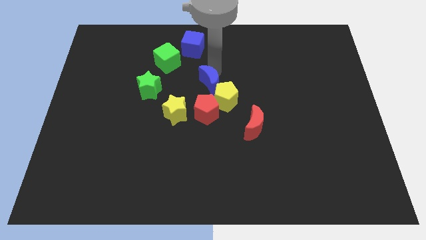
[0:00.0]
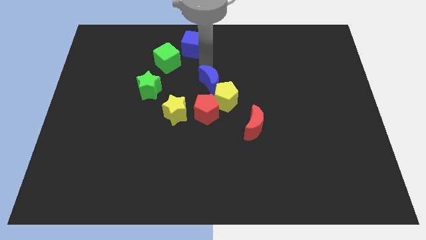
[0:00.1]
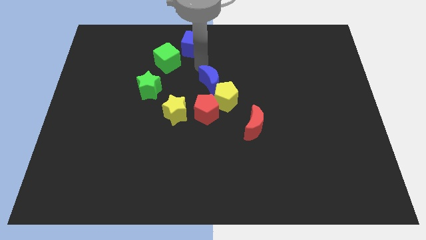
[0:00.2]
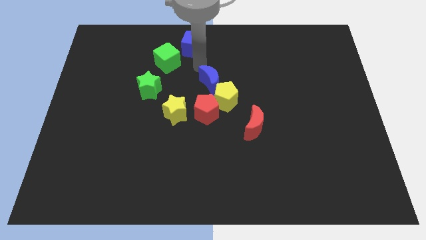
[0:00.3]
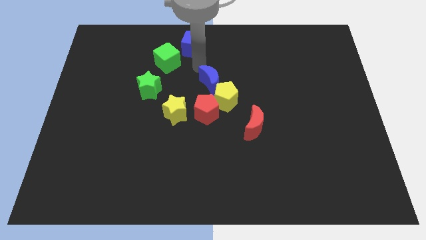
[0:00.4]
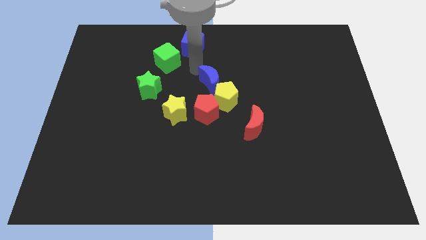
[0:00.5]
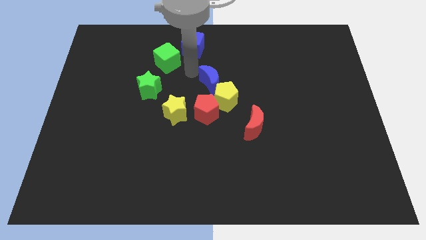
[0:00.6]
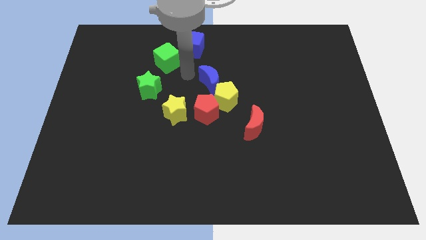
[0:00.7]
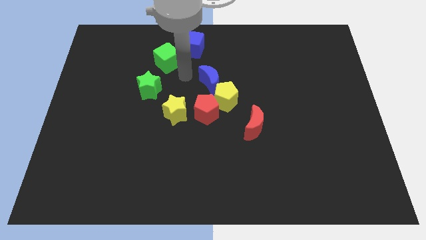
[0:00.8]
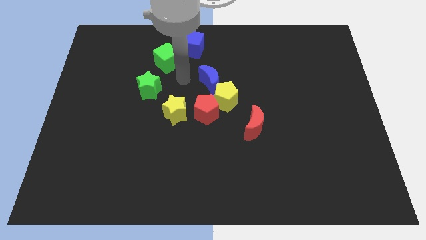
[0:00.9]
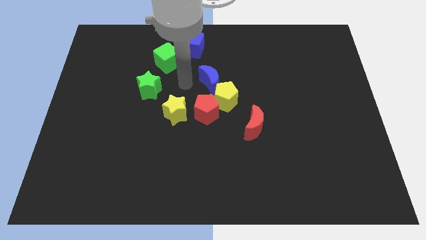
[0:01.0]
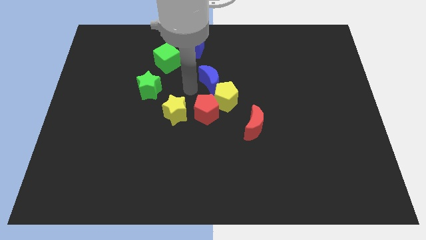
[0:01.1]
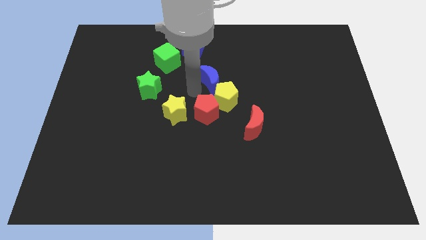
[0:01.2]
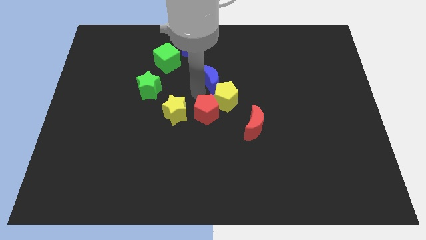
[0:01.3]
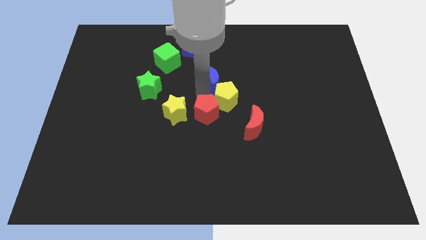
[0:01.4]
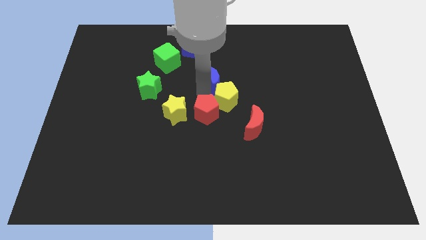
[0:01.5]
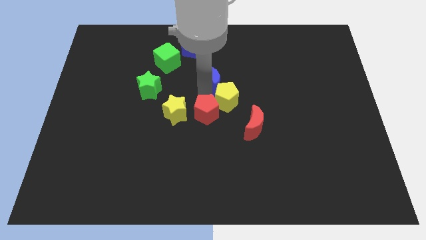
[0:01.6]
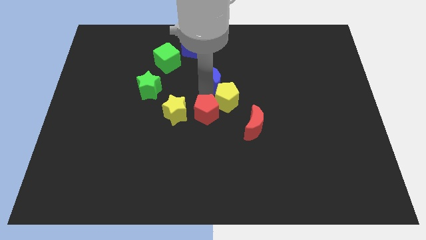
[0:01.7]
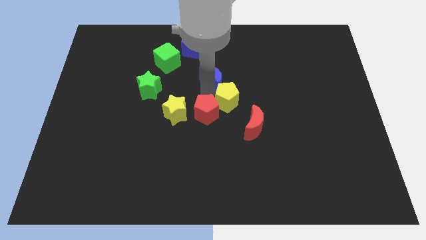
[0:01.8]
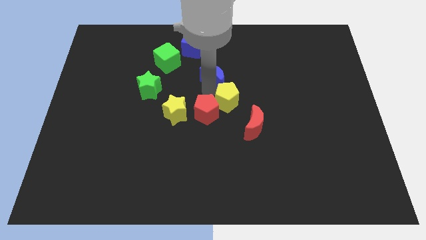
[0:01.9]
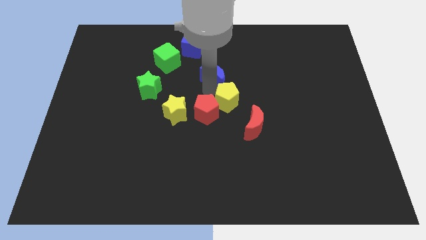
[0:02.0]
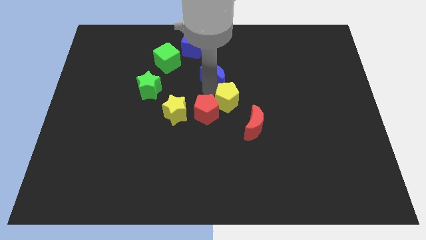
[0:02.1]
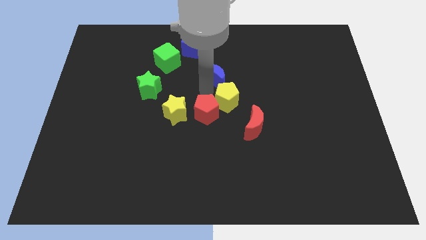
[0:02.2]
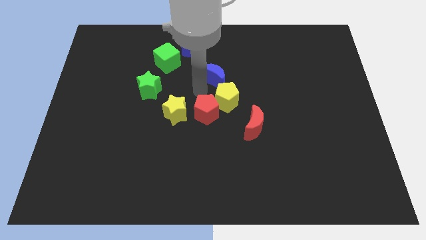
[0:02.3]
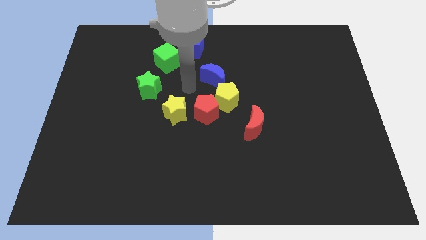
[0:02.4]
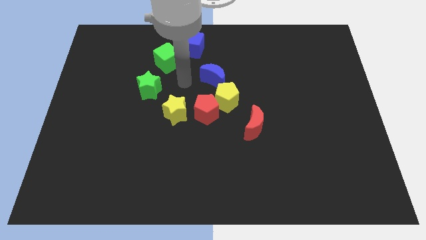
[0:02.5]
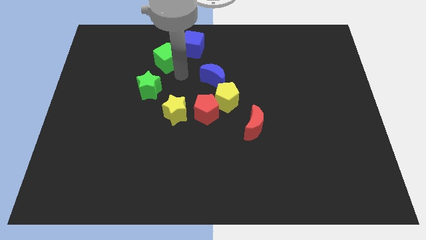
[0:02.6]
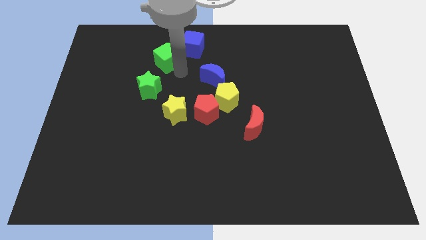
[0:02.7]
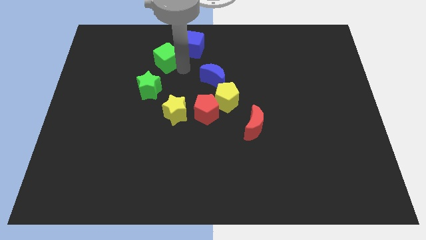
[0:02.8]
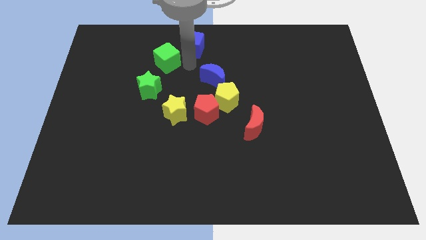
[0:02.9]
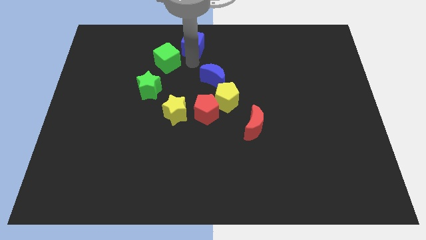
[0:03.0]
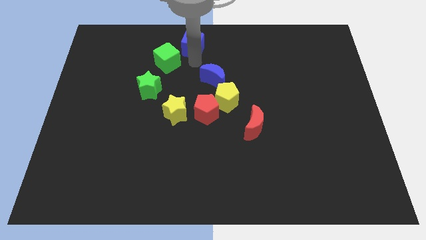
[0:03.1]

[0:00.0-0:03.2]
place the arm below the blue cube

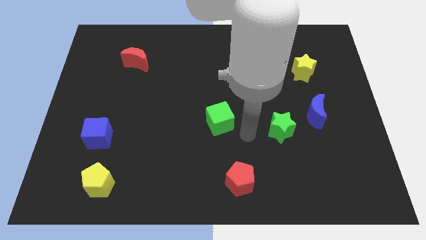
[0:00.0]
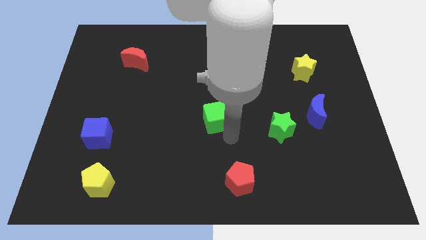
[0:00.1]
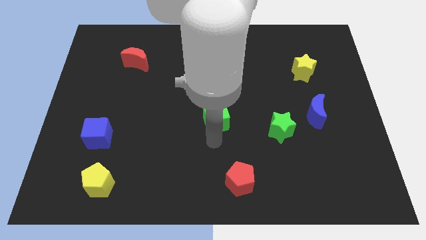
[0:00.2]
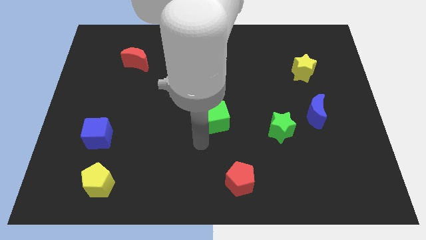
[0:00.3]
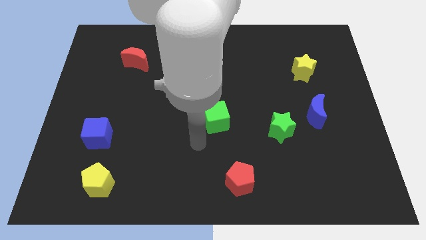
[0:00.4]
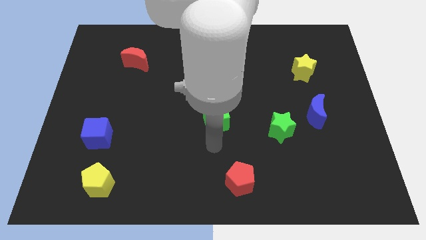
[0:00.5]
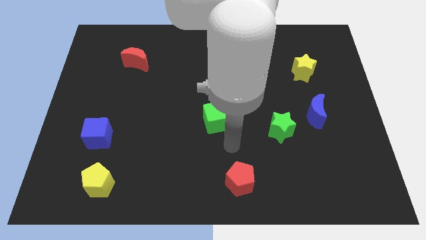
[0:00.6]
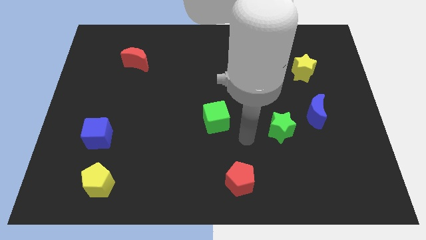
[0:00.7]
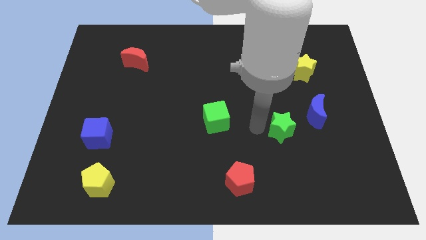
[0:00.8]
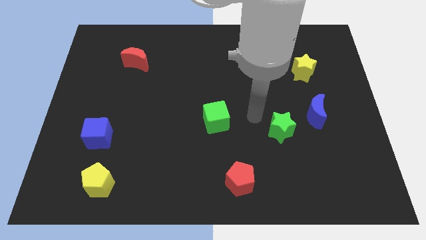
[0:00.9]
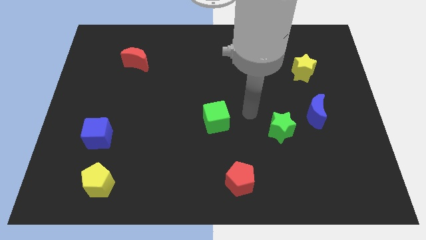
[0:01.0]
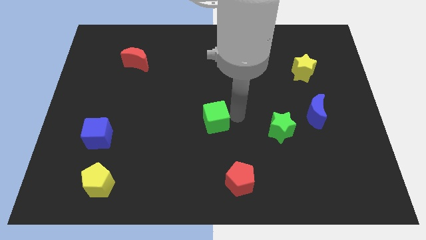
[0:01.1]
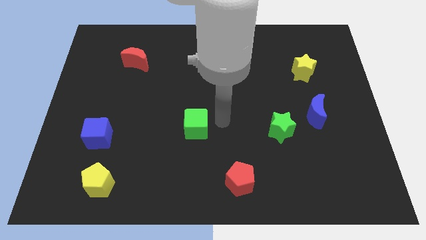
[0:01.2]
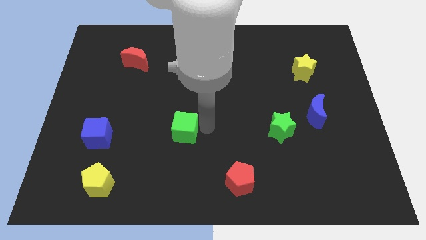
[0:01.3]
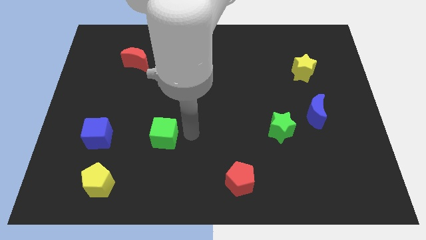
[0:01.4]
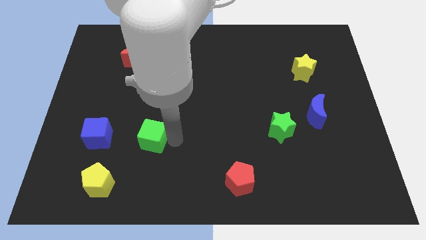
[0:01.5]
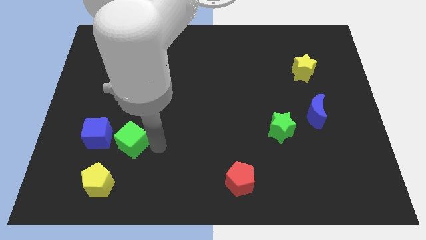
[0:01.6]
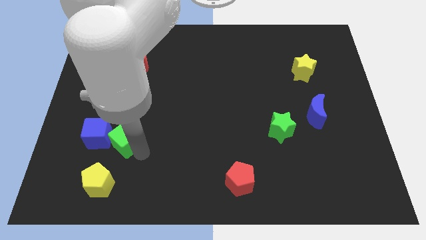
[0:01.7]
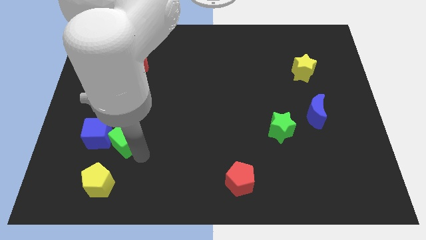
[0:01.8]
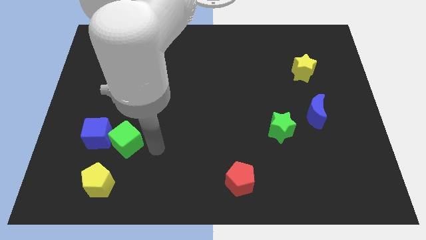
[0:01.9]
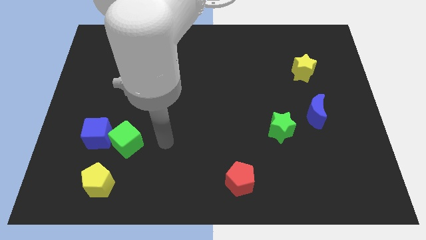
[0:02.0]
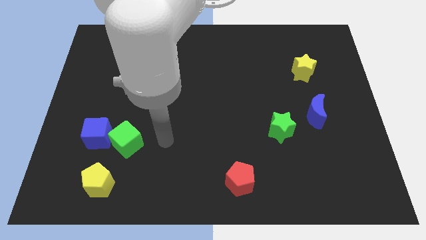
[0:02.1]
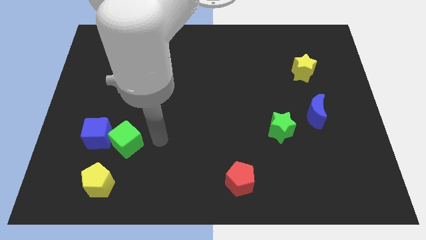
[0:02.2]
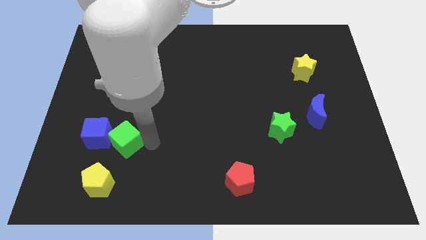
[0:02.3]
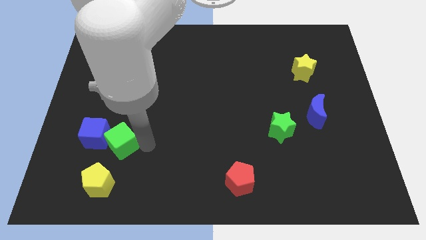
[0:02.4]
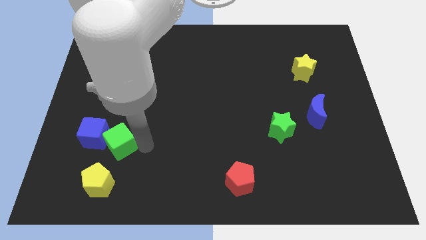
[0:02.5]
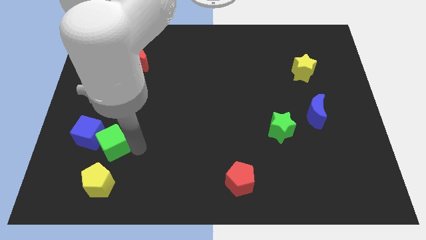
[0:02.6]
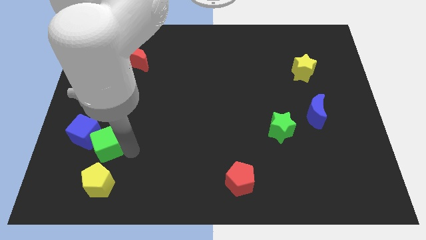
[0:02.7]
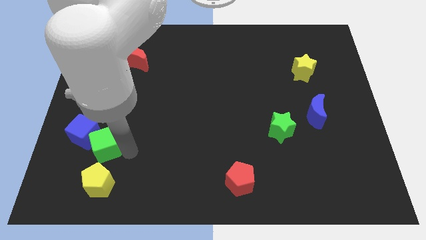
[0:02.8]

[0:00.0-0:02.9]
push green cube in to blue cube

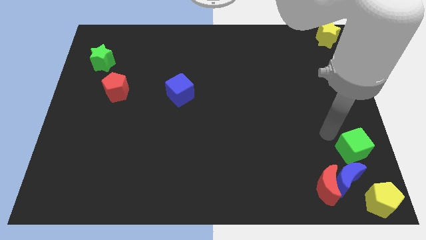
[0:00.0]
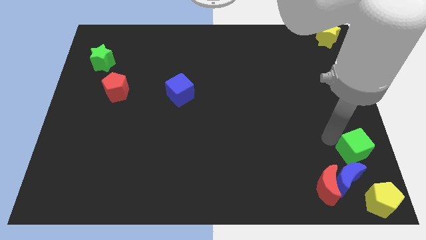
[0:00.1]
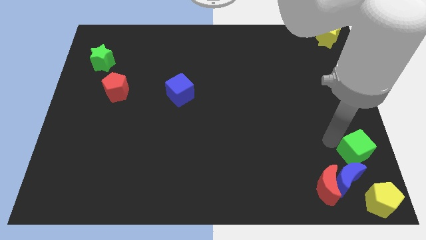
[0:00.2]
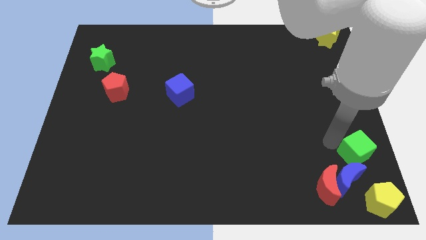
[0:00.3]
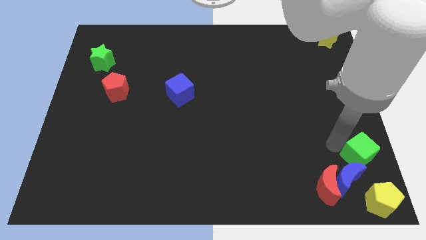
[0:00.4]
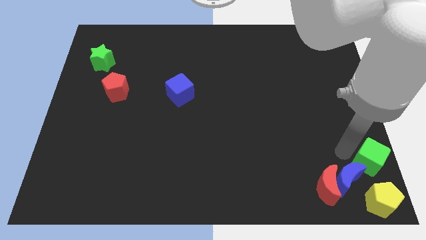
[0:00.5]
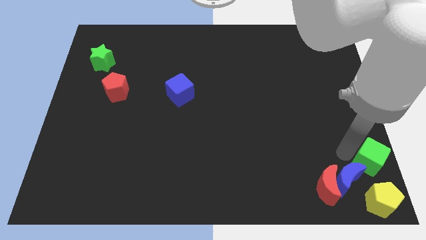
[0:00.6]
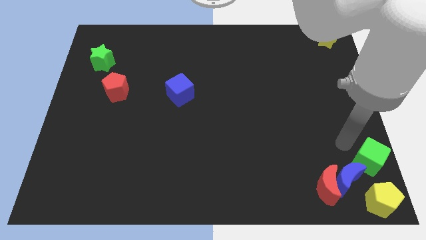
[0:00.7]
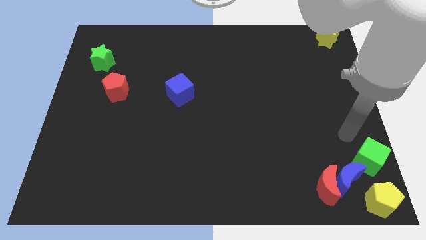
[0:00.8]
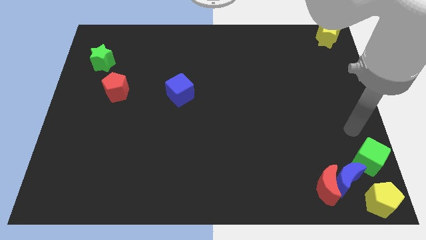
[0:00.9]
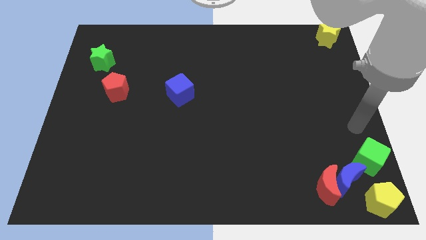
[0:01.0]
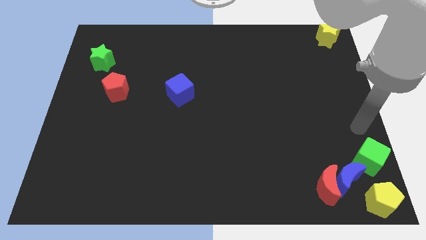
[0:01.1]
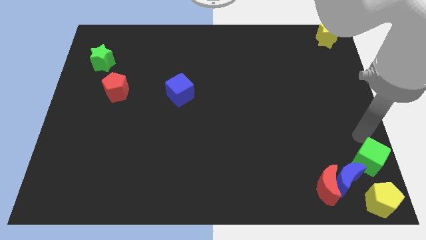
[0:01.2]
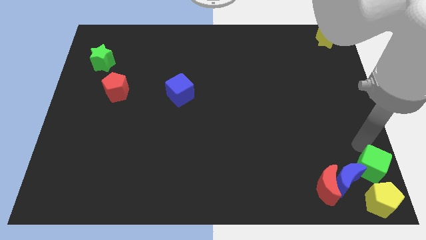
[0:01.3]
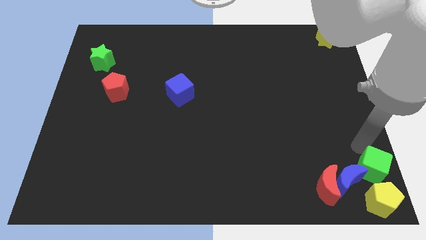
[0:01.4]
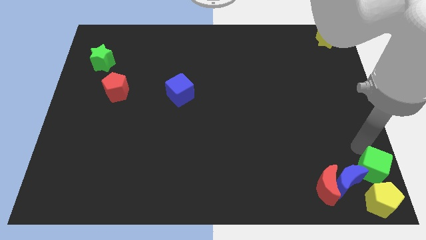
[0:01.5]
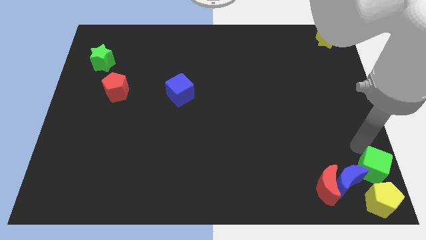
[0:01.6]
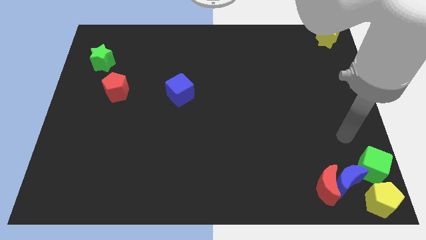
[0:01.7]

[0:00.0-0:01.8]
move the green cube into the group of blocks

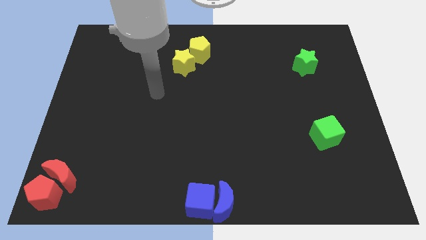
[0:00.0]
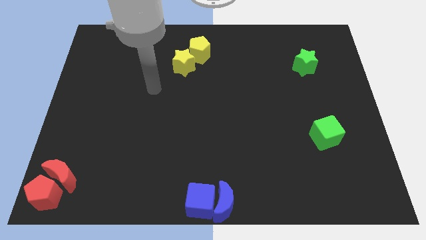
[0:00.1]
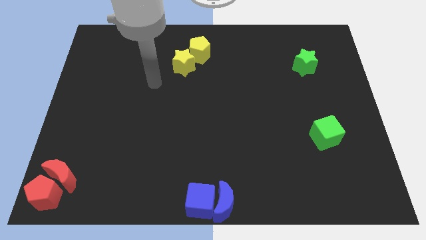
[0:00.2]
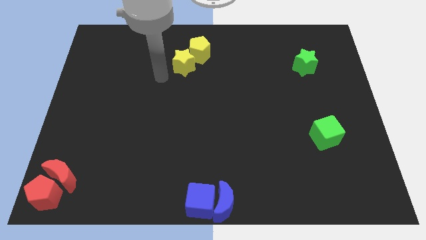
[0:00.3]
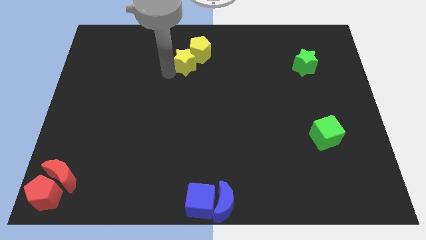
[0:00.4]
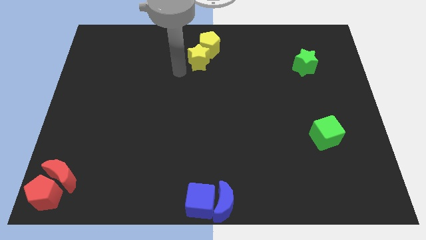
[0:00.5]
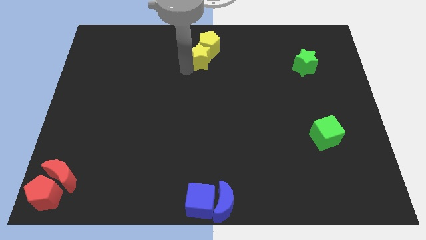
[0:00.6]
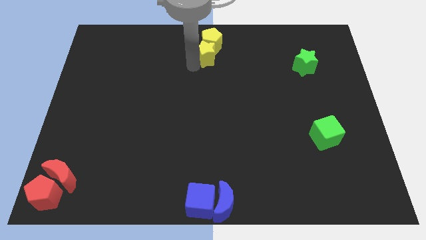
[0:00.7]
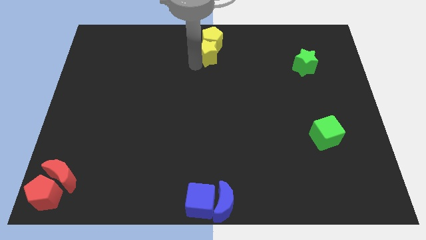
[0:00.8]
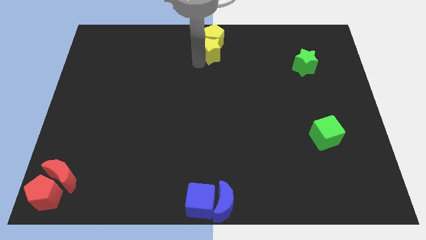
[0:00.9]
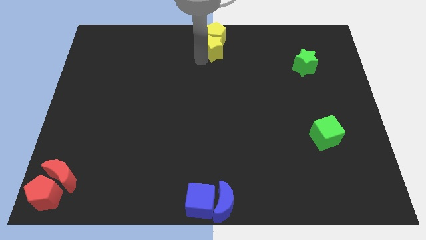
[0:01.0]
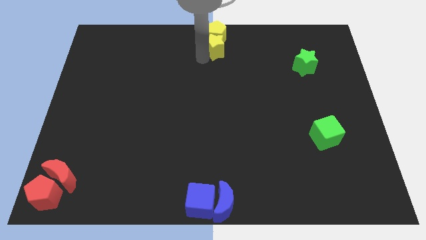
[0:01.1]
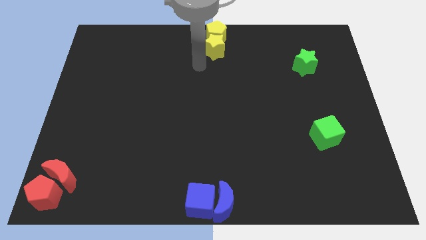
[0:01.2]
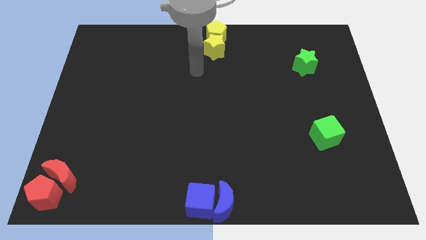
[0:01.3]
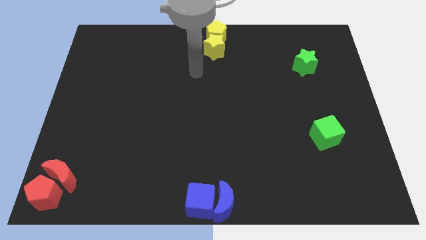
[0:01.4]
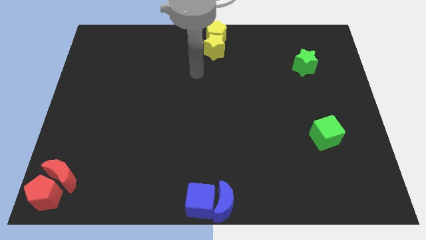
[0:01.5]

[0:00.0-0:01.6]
move the yellow blocks to the top center of the board
